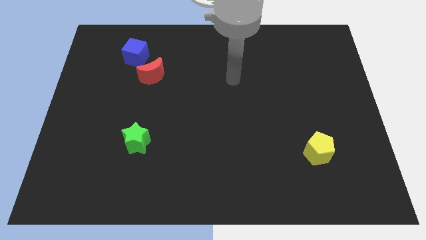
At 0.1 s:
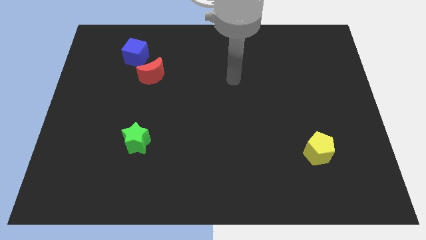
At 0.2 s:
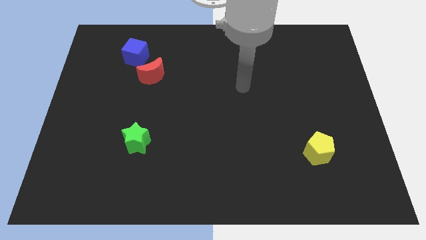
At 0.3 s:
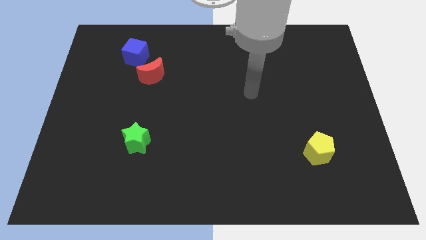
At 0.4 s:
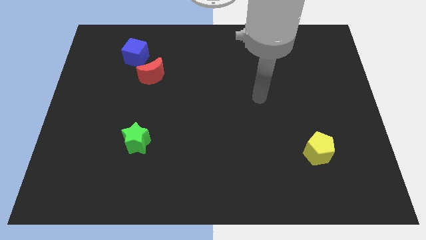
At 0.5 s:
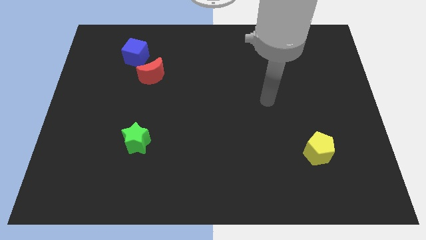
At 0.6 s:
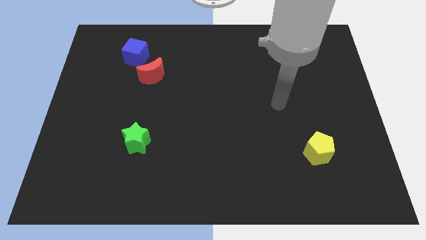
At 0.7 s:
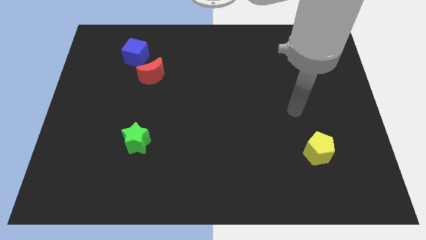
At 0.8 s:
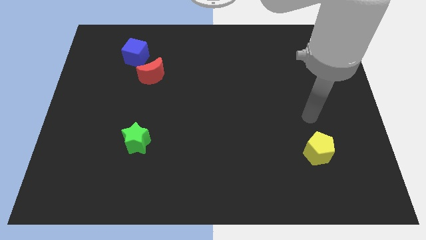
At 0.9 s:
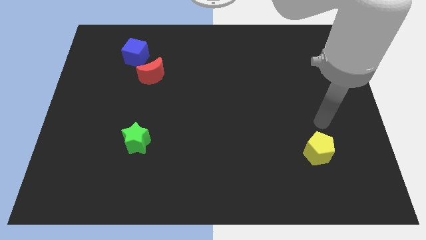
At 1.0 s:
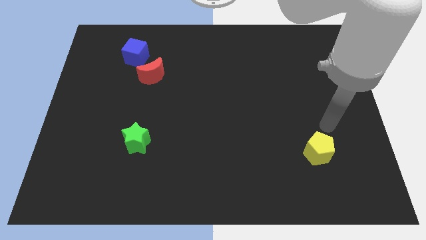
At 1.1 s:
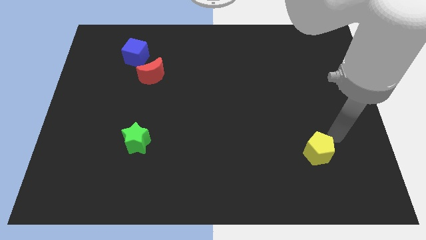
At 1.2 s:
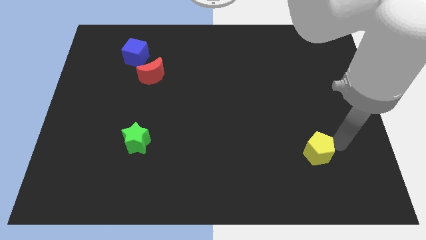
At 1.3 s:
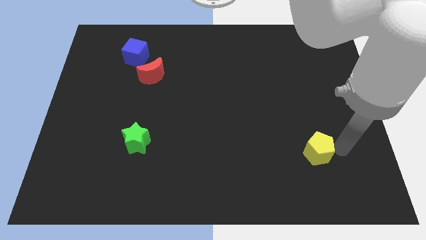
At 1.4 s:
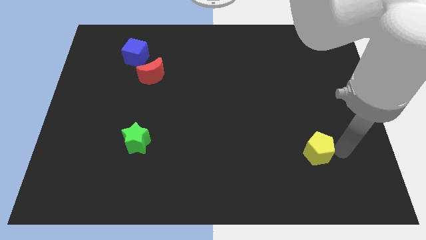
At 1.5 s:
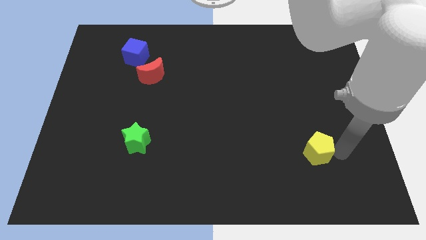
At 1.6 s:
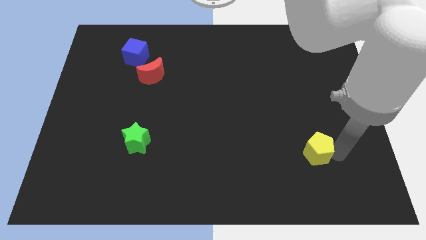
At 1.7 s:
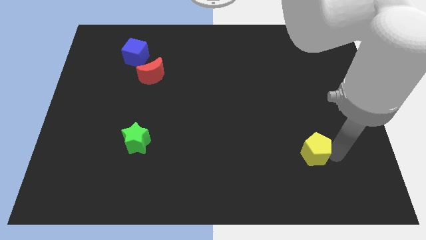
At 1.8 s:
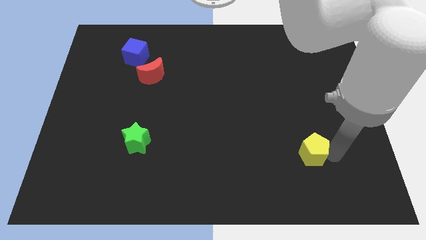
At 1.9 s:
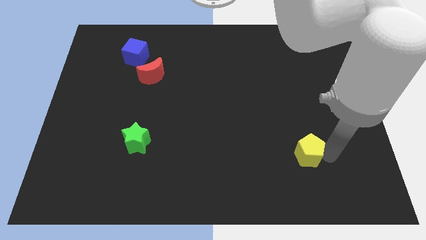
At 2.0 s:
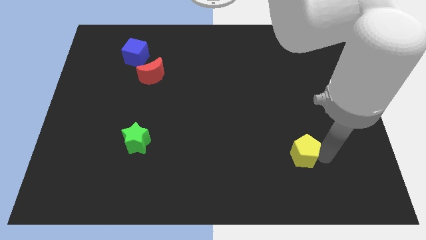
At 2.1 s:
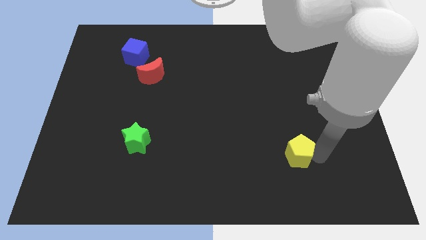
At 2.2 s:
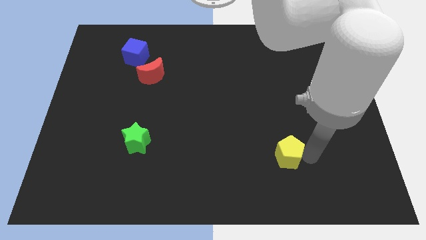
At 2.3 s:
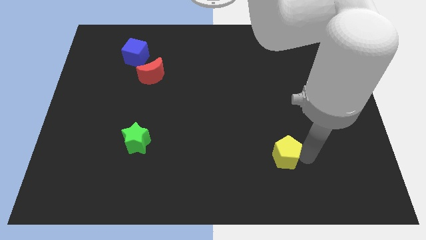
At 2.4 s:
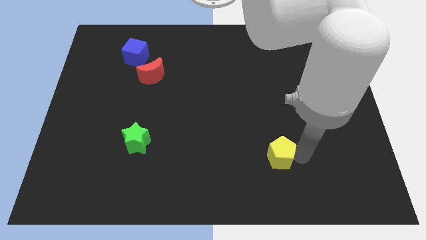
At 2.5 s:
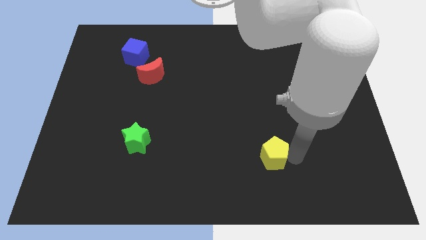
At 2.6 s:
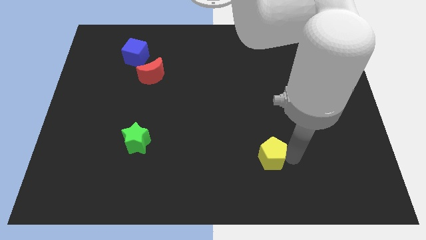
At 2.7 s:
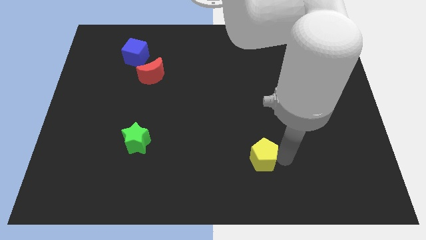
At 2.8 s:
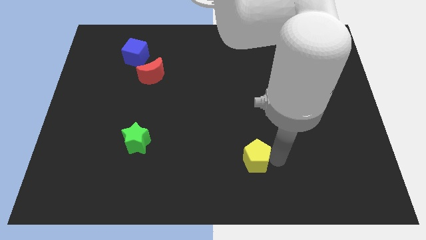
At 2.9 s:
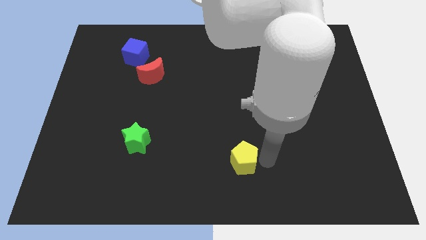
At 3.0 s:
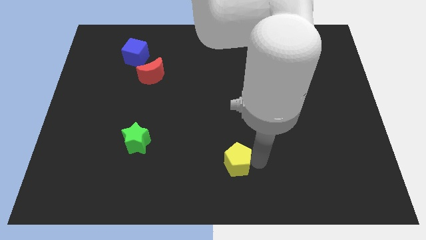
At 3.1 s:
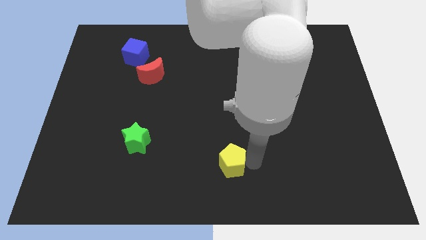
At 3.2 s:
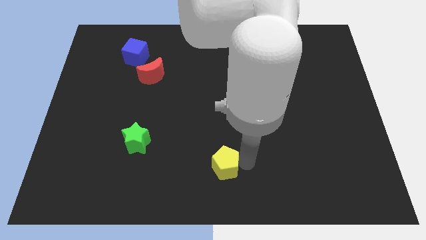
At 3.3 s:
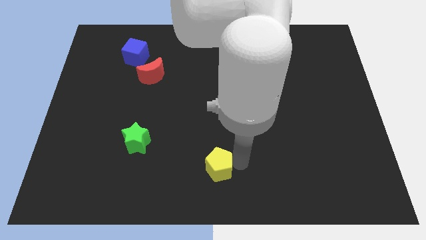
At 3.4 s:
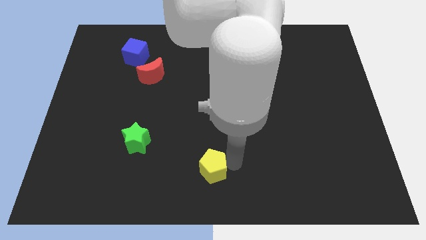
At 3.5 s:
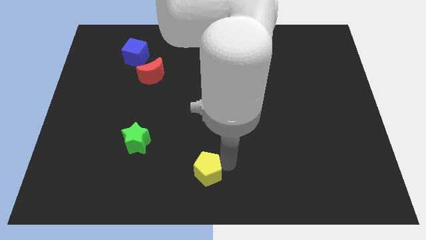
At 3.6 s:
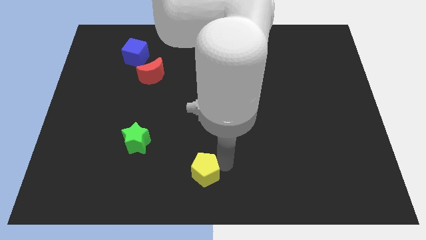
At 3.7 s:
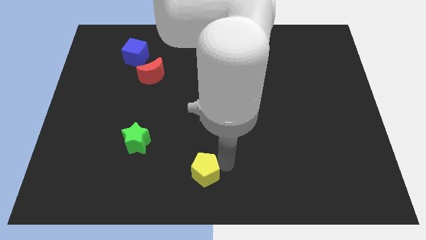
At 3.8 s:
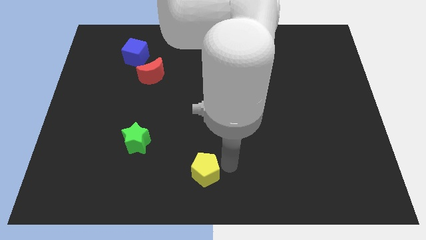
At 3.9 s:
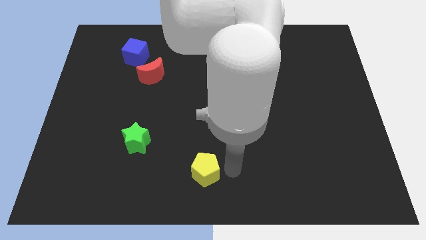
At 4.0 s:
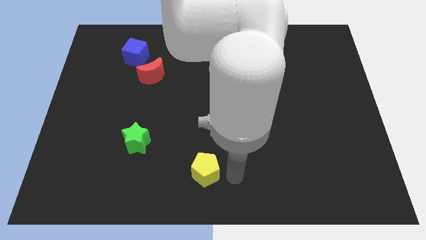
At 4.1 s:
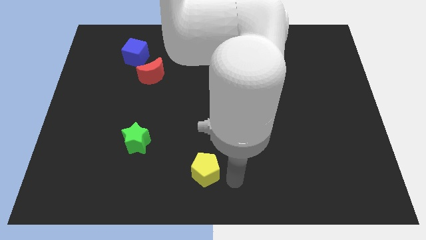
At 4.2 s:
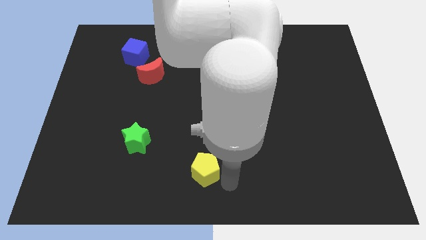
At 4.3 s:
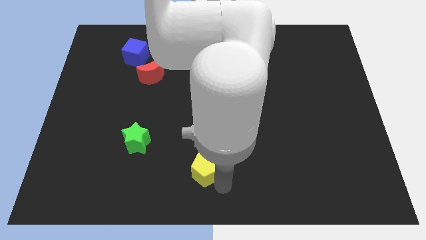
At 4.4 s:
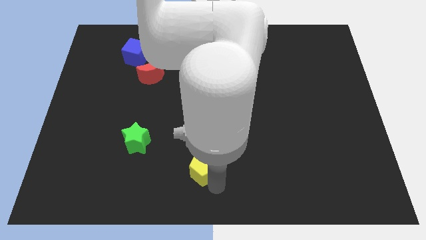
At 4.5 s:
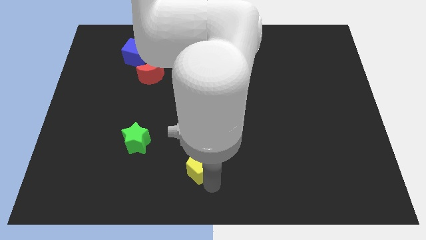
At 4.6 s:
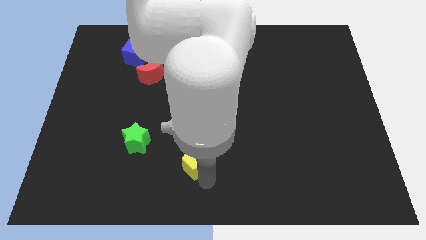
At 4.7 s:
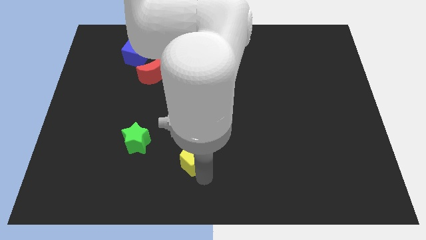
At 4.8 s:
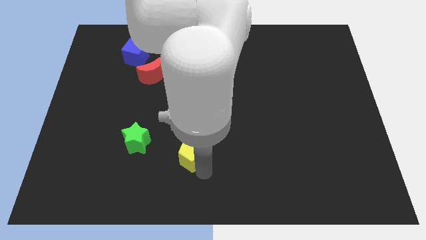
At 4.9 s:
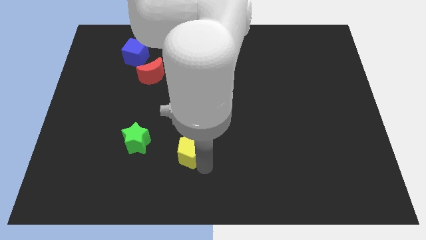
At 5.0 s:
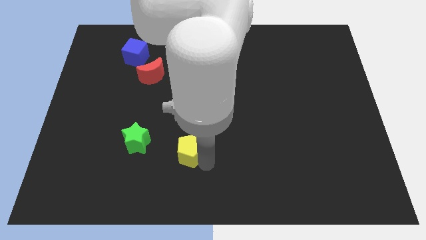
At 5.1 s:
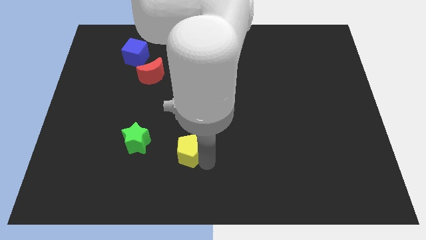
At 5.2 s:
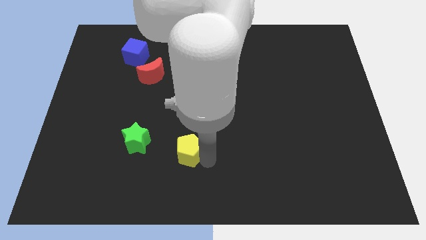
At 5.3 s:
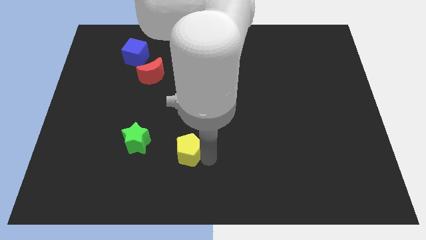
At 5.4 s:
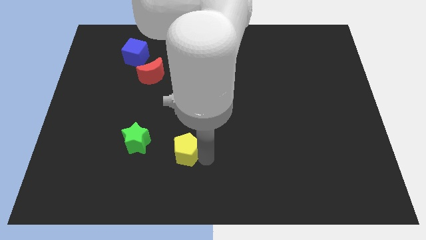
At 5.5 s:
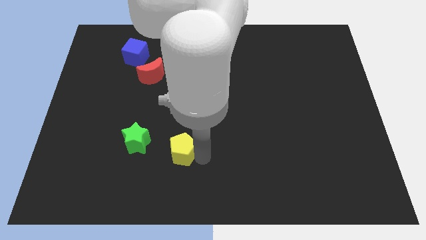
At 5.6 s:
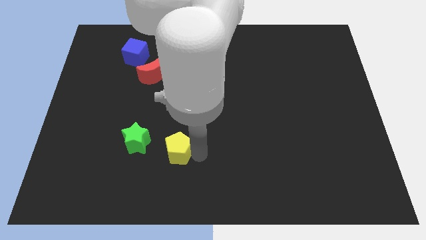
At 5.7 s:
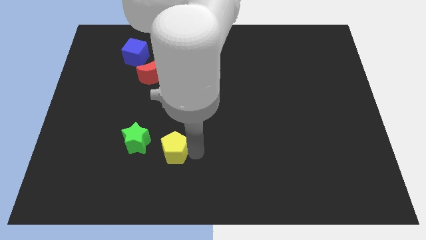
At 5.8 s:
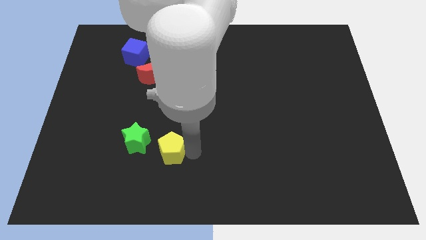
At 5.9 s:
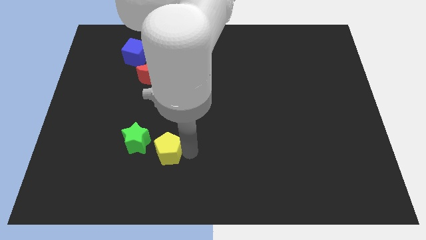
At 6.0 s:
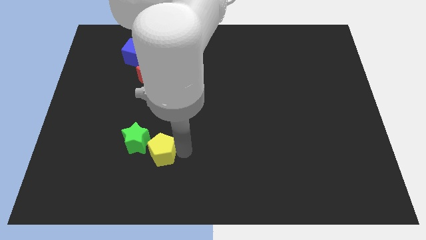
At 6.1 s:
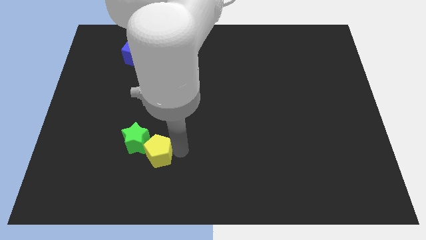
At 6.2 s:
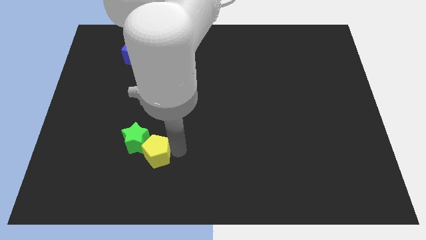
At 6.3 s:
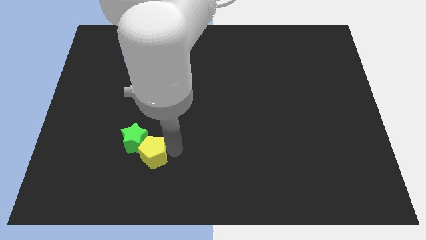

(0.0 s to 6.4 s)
put the pentagon to the green block

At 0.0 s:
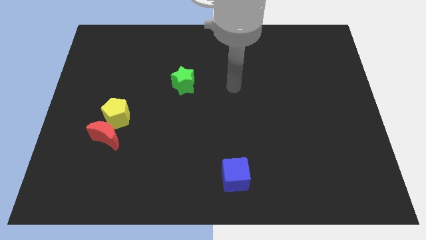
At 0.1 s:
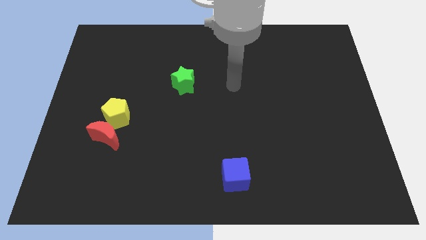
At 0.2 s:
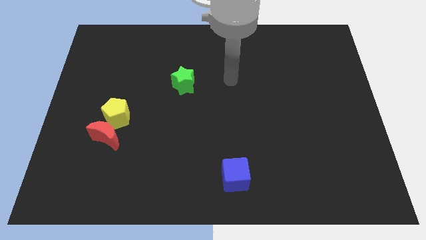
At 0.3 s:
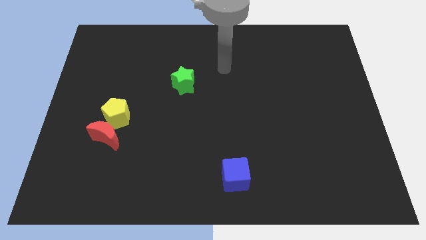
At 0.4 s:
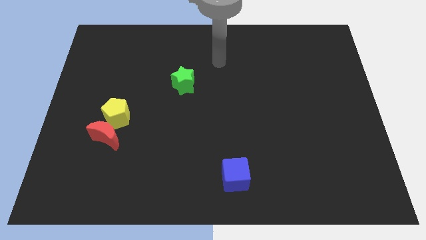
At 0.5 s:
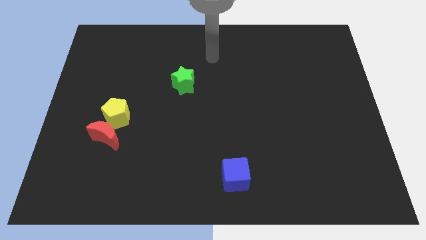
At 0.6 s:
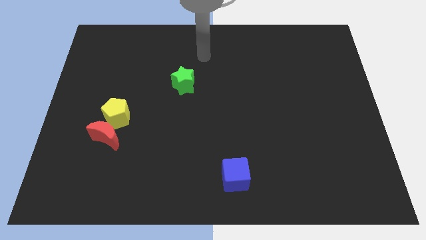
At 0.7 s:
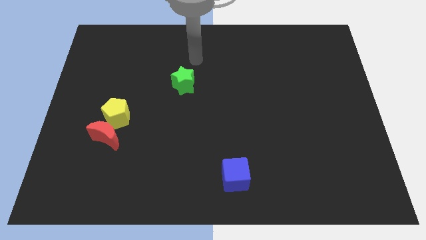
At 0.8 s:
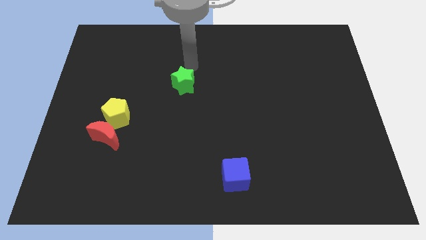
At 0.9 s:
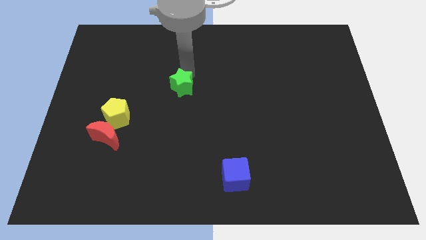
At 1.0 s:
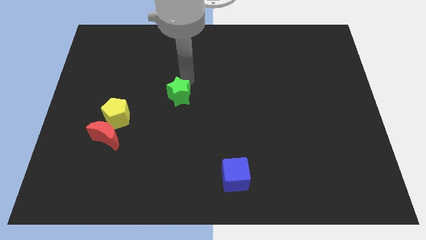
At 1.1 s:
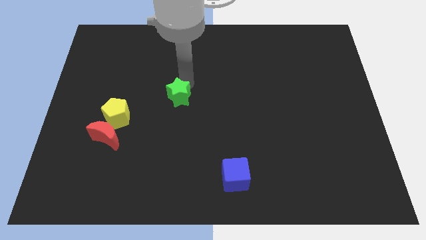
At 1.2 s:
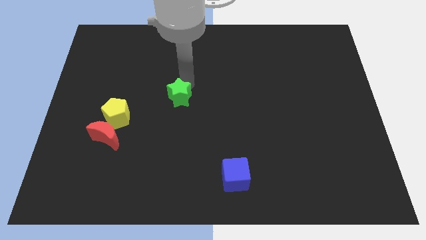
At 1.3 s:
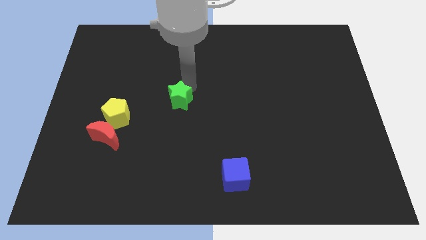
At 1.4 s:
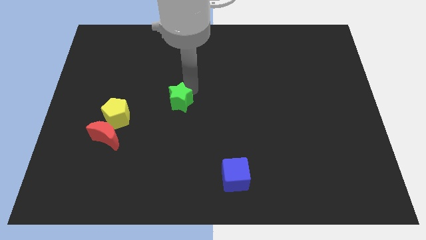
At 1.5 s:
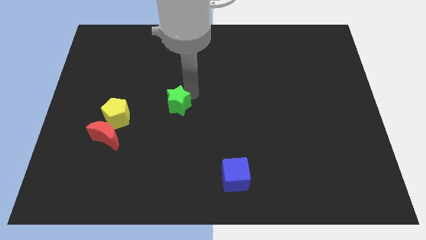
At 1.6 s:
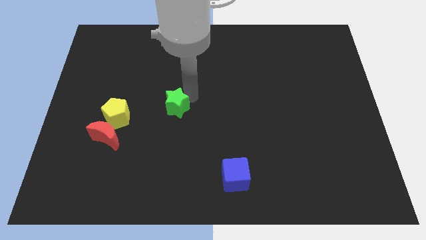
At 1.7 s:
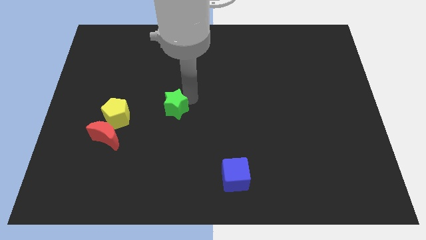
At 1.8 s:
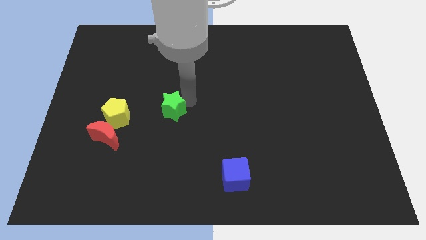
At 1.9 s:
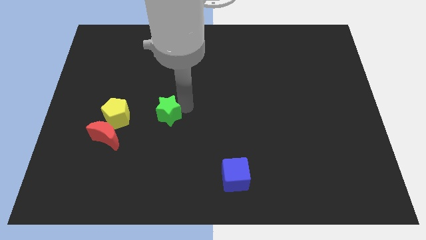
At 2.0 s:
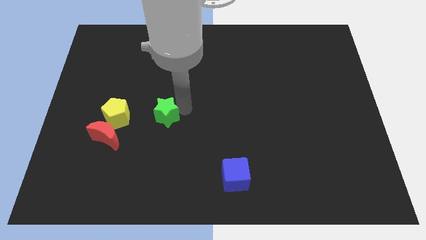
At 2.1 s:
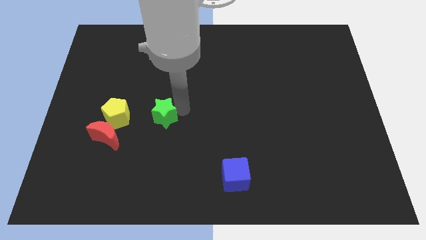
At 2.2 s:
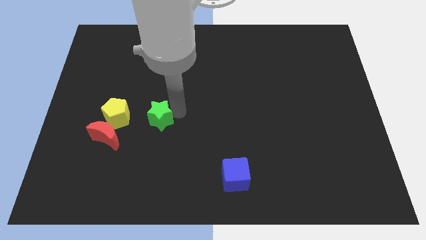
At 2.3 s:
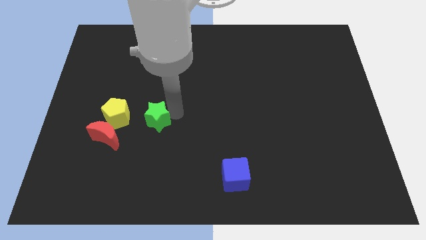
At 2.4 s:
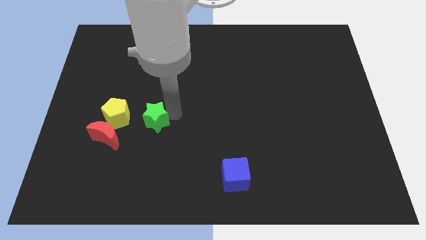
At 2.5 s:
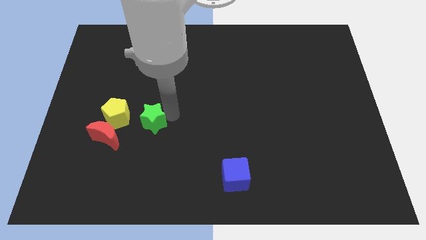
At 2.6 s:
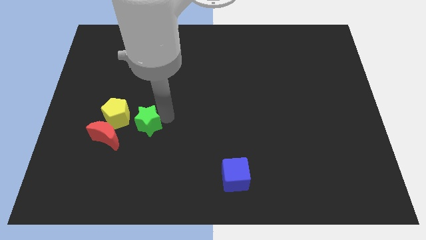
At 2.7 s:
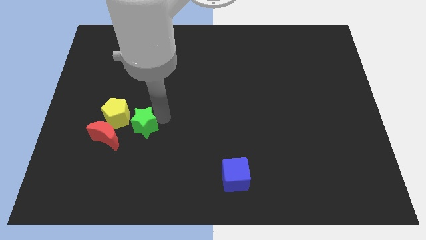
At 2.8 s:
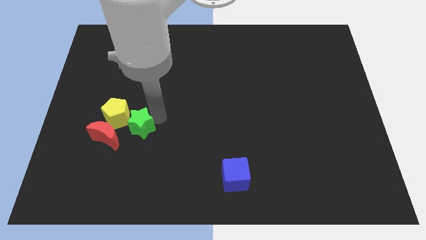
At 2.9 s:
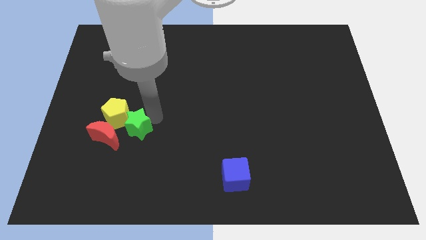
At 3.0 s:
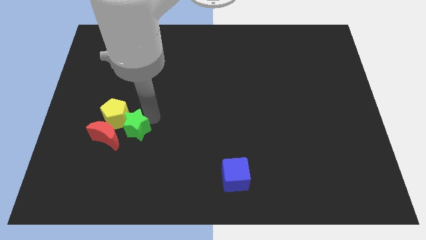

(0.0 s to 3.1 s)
slide the green star next to the pentagon
